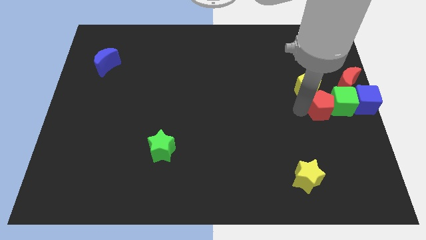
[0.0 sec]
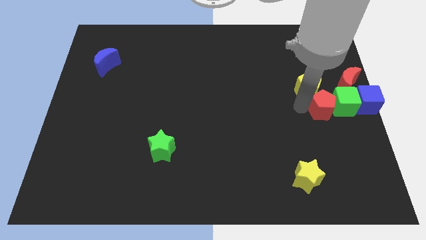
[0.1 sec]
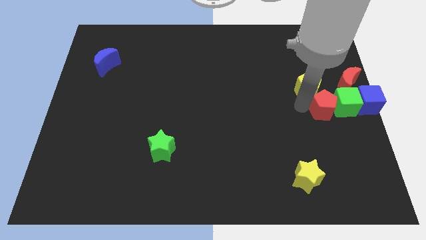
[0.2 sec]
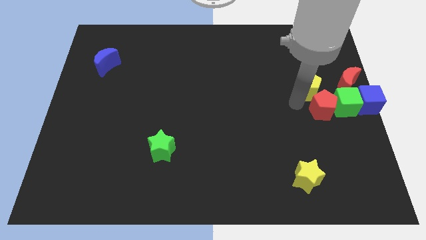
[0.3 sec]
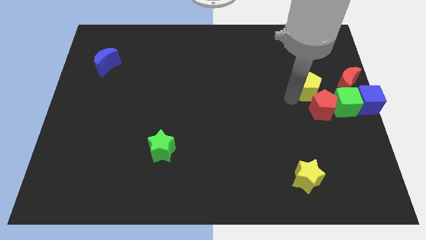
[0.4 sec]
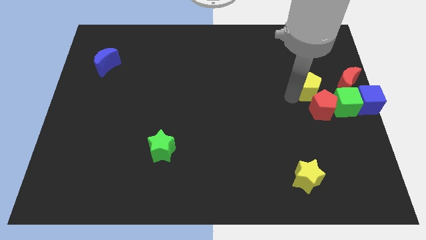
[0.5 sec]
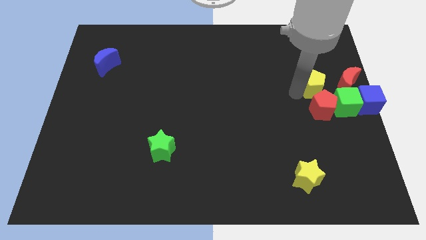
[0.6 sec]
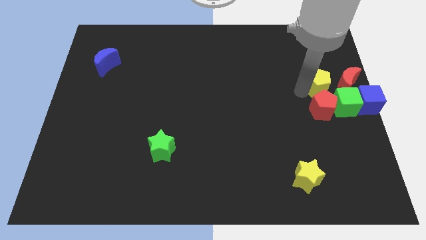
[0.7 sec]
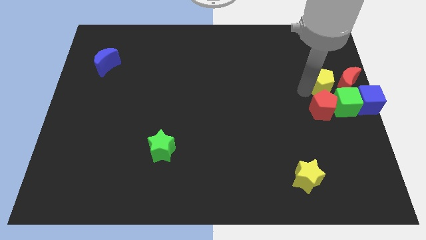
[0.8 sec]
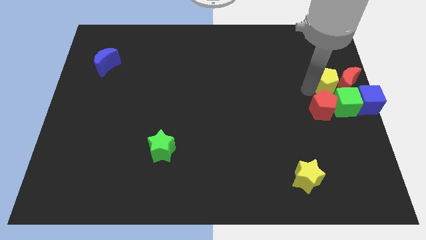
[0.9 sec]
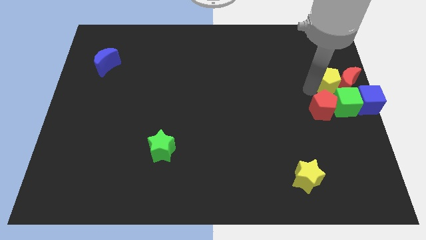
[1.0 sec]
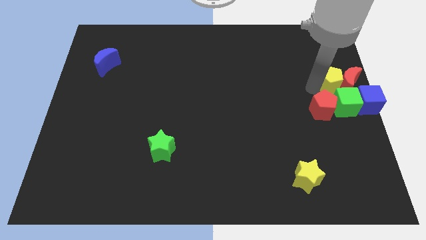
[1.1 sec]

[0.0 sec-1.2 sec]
push yellow pentagon into red moon

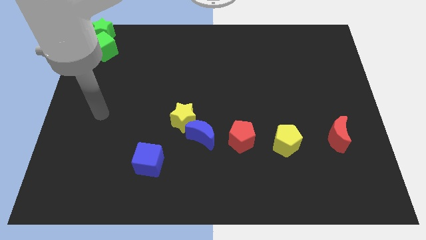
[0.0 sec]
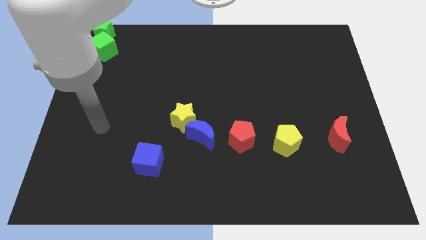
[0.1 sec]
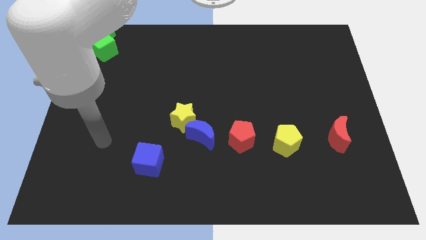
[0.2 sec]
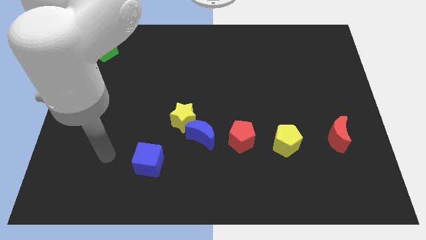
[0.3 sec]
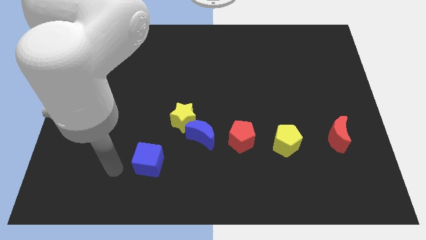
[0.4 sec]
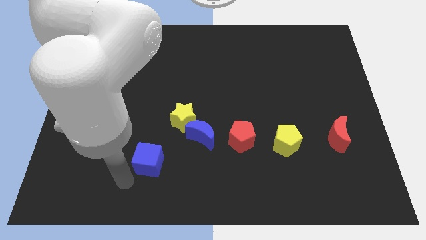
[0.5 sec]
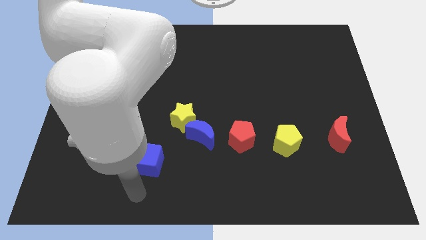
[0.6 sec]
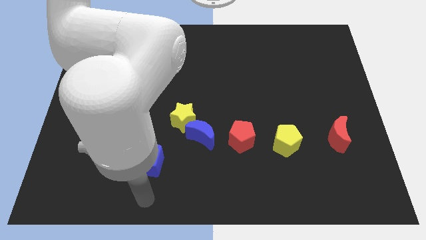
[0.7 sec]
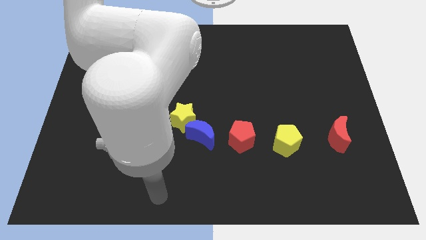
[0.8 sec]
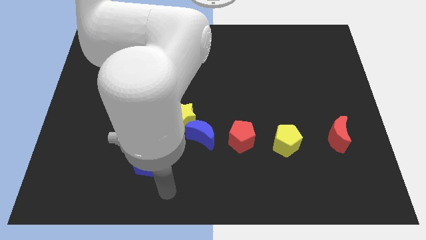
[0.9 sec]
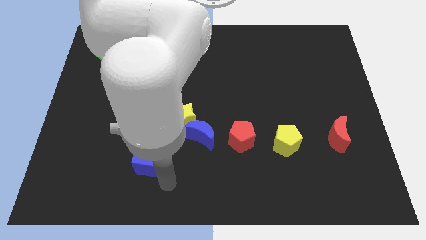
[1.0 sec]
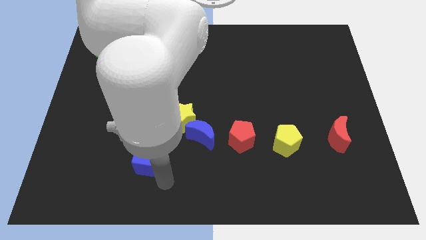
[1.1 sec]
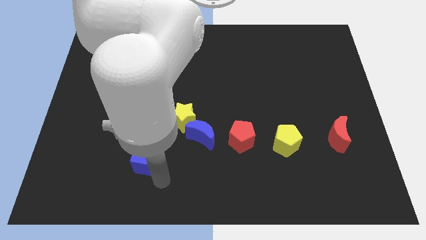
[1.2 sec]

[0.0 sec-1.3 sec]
place your arm on the bottom of blue cube

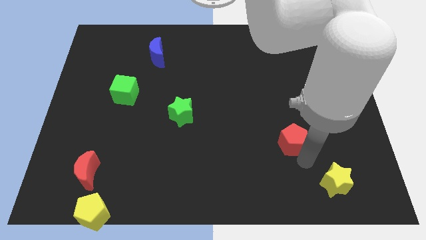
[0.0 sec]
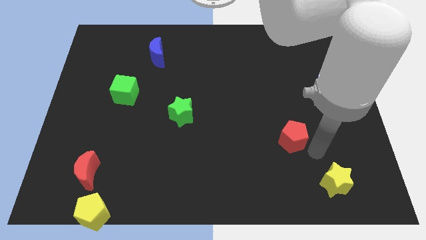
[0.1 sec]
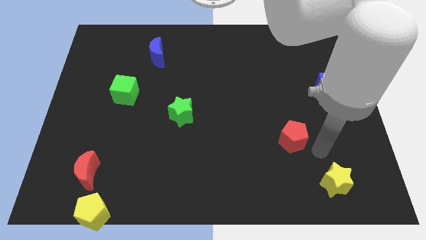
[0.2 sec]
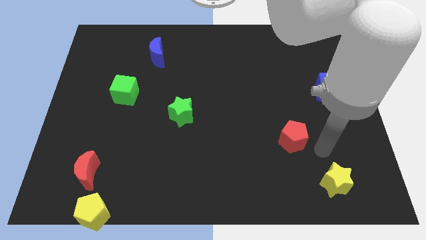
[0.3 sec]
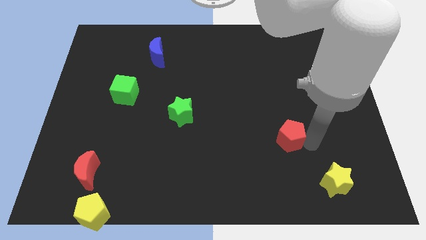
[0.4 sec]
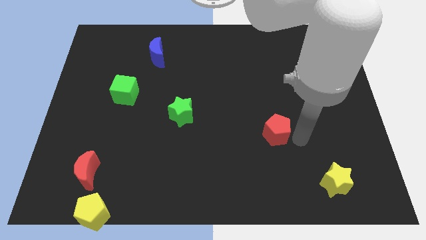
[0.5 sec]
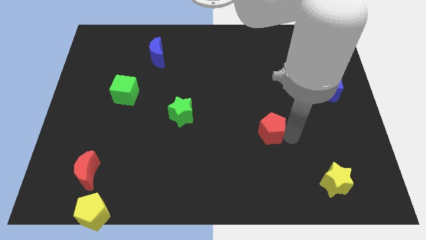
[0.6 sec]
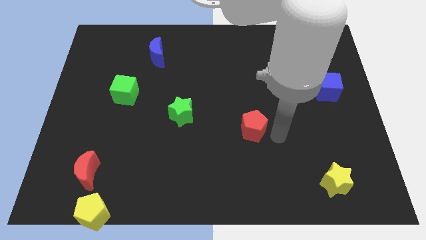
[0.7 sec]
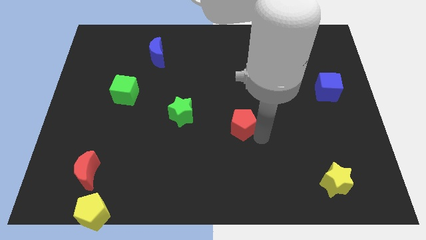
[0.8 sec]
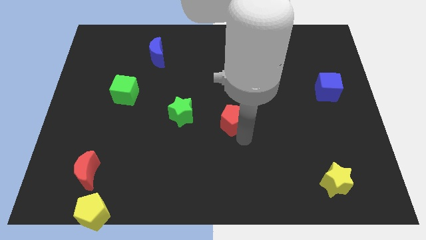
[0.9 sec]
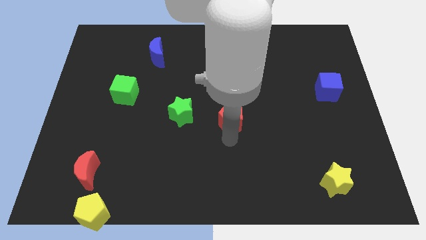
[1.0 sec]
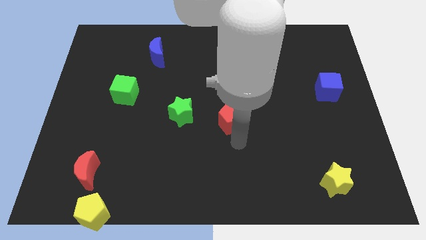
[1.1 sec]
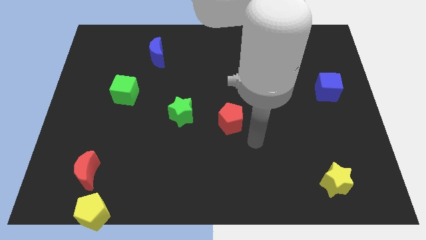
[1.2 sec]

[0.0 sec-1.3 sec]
place red pentagon right to green star

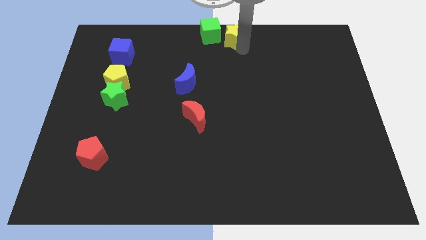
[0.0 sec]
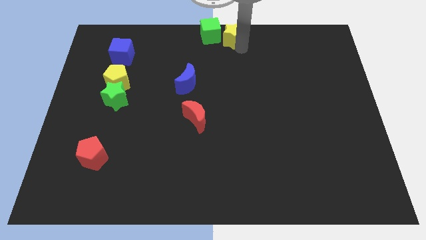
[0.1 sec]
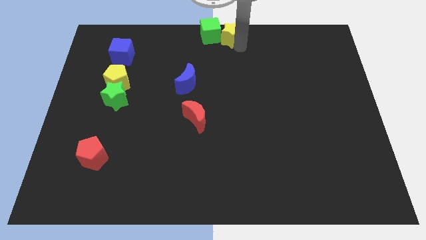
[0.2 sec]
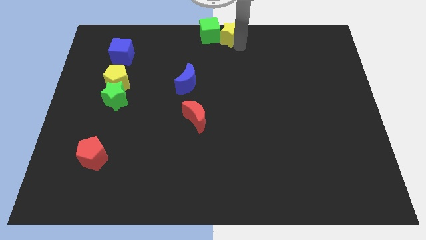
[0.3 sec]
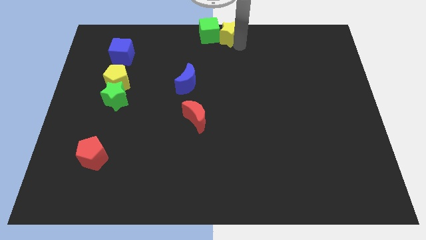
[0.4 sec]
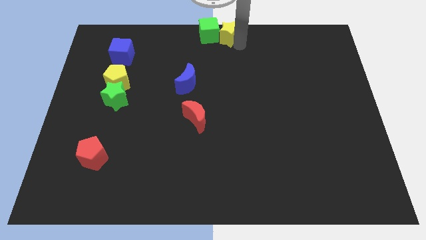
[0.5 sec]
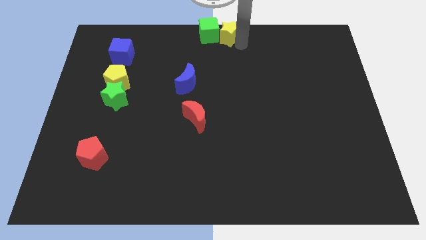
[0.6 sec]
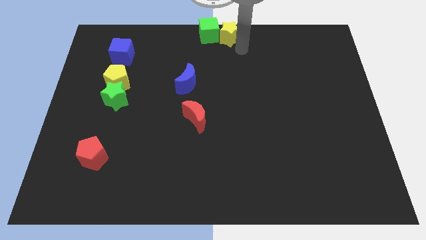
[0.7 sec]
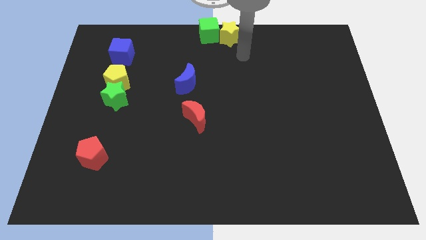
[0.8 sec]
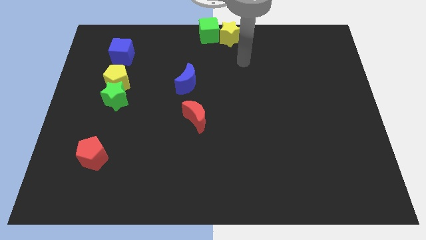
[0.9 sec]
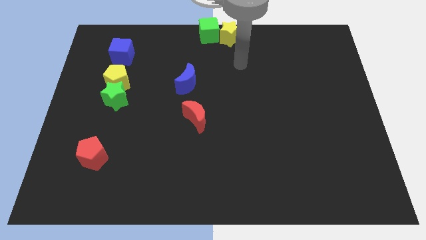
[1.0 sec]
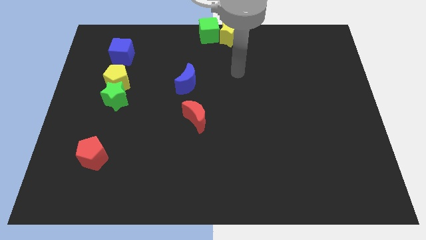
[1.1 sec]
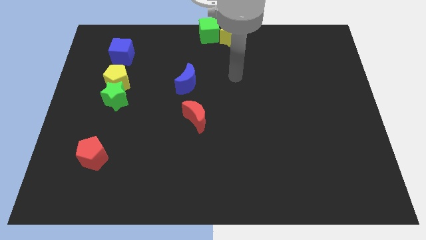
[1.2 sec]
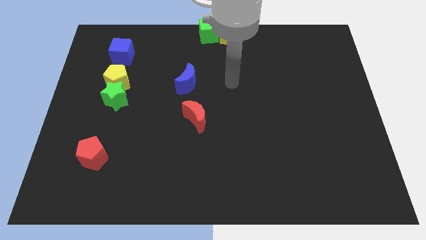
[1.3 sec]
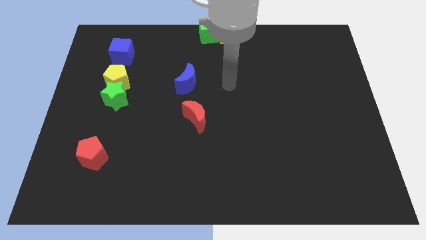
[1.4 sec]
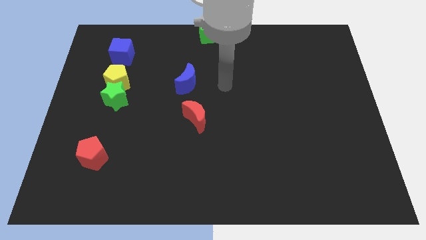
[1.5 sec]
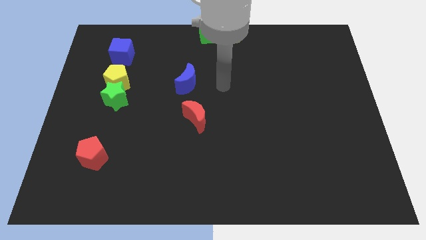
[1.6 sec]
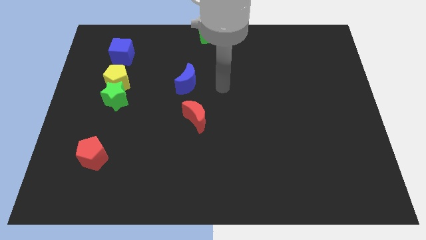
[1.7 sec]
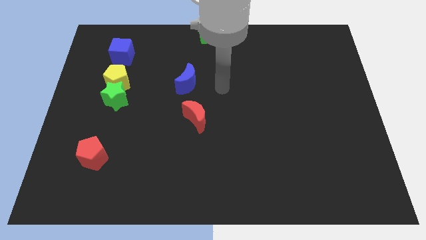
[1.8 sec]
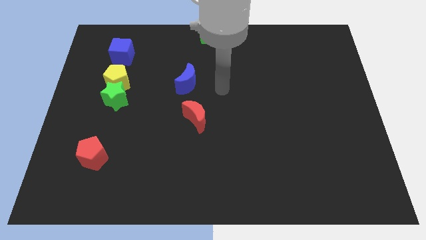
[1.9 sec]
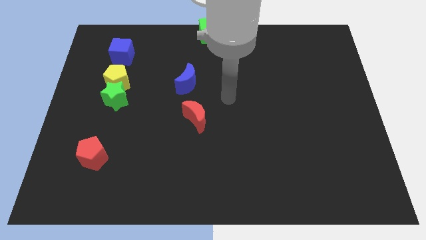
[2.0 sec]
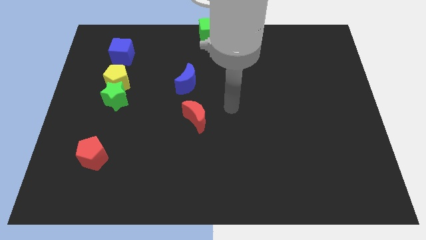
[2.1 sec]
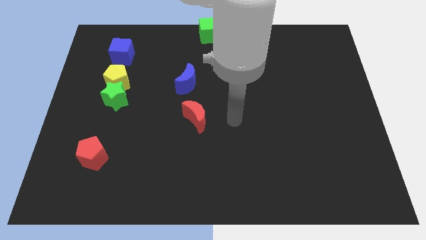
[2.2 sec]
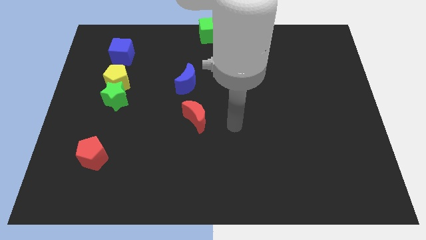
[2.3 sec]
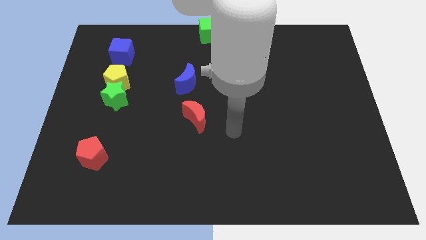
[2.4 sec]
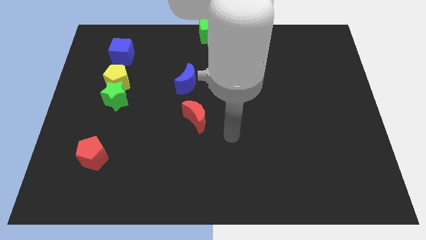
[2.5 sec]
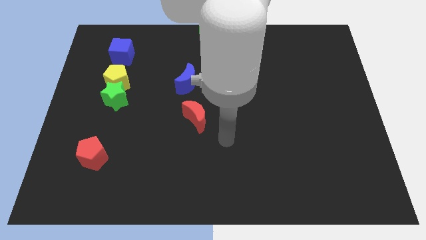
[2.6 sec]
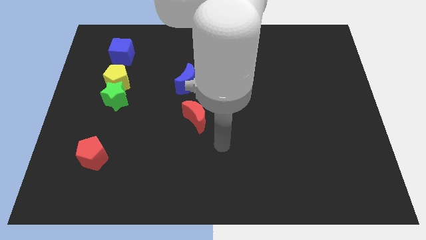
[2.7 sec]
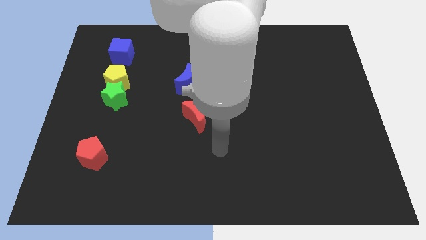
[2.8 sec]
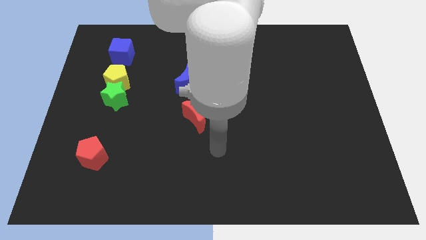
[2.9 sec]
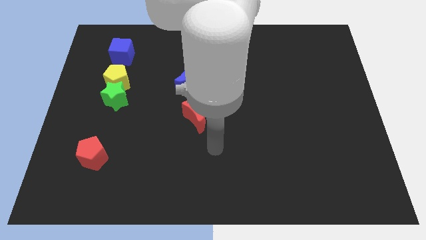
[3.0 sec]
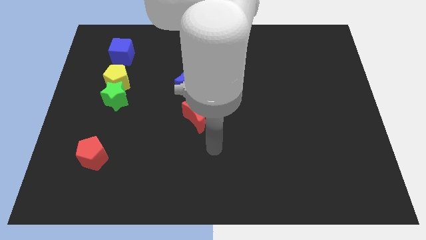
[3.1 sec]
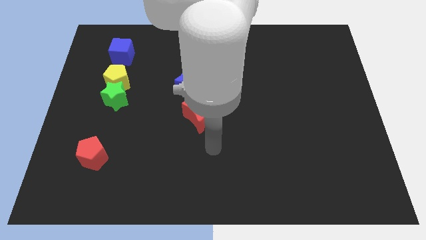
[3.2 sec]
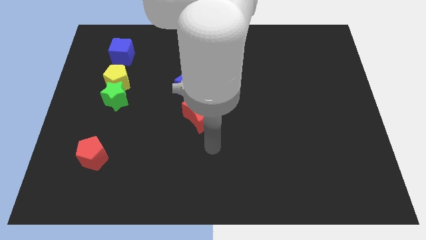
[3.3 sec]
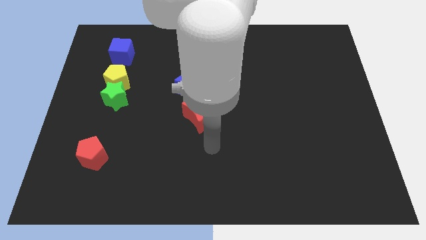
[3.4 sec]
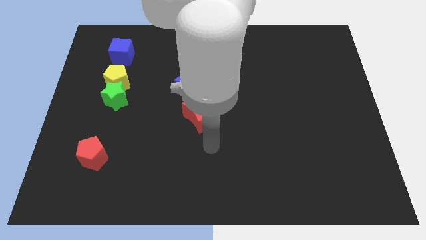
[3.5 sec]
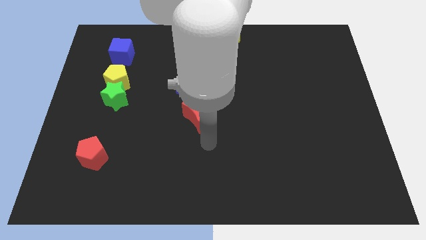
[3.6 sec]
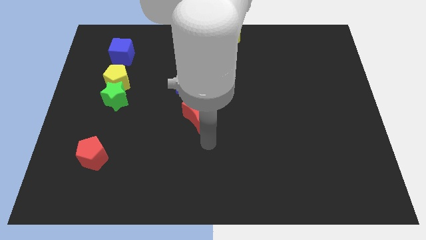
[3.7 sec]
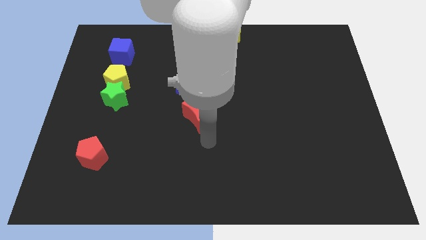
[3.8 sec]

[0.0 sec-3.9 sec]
slightly adjust the yellow star to right side green star

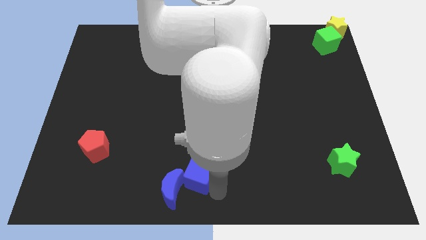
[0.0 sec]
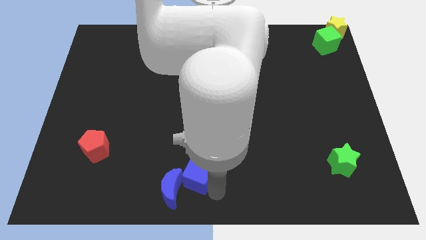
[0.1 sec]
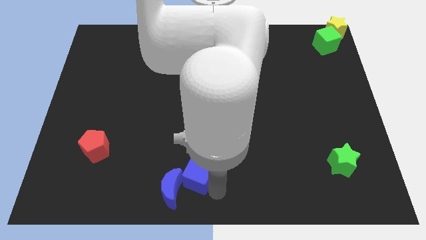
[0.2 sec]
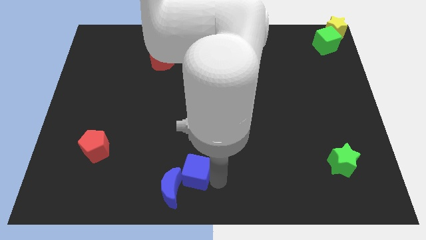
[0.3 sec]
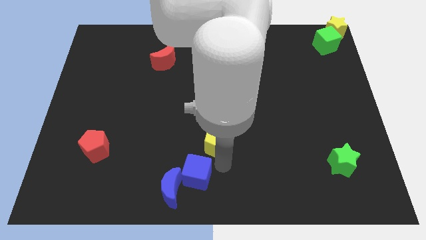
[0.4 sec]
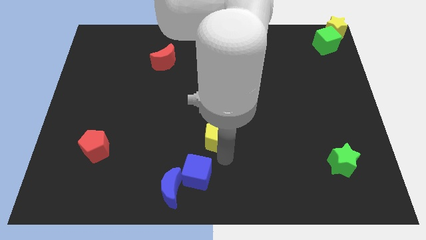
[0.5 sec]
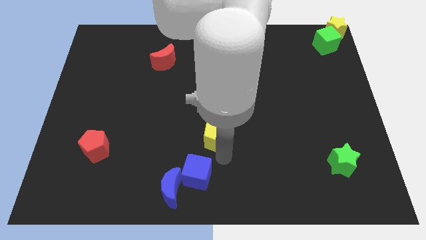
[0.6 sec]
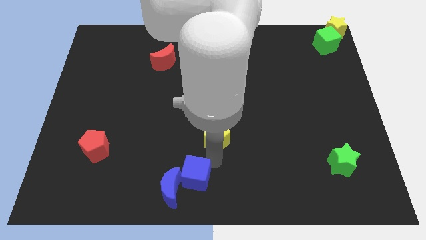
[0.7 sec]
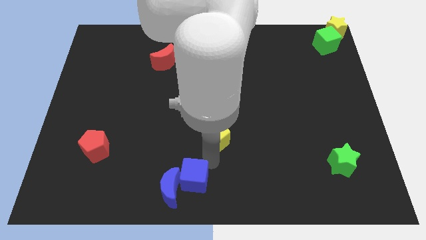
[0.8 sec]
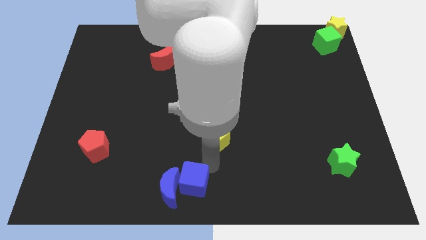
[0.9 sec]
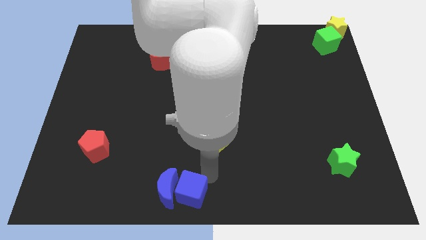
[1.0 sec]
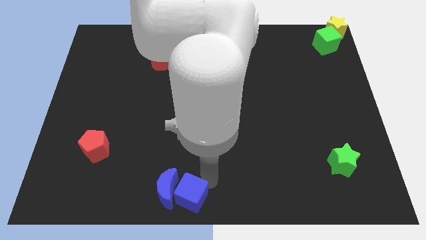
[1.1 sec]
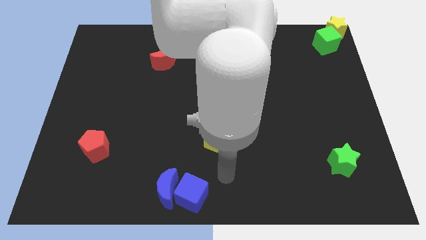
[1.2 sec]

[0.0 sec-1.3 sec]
move the blue cube to the right of the blue crescent
